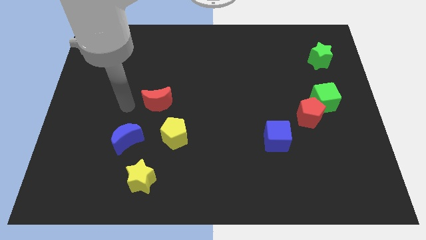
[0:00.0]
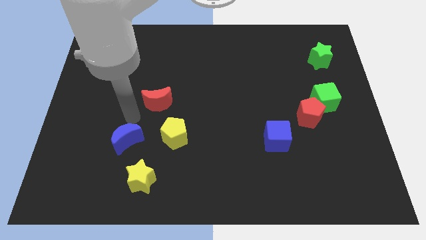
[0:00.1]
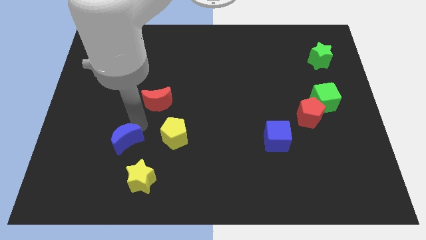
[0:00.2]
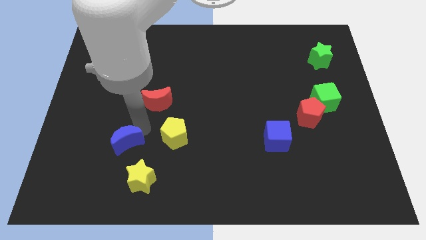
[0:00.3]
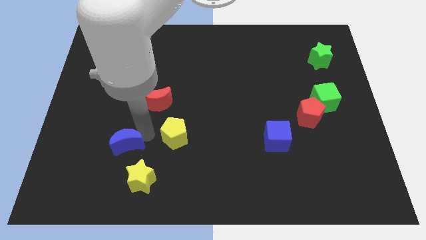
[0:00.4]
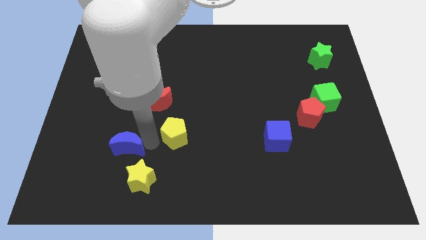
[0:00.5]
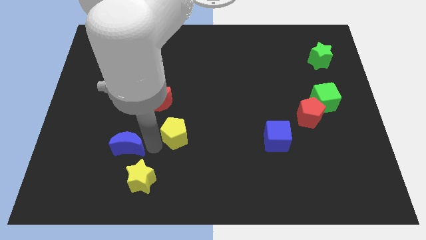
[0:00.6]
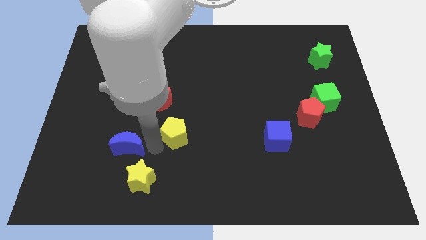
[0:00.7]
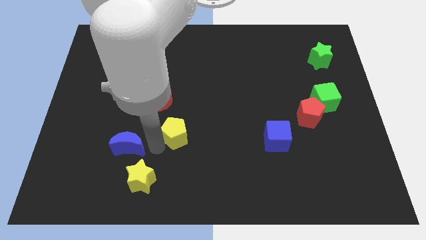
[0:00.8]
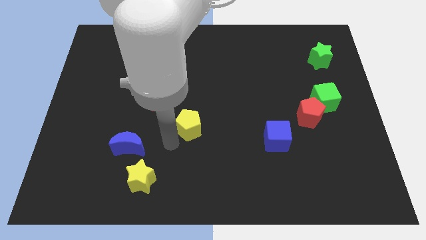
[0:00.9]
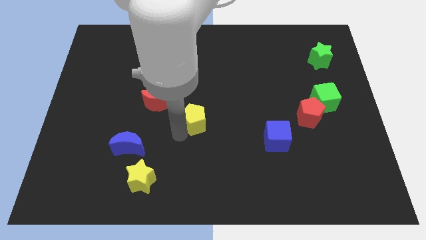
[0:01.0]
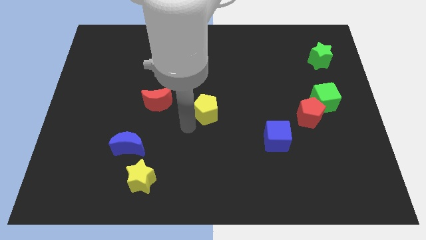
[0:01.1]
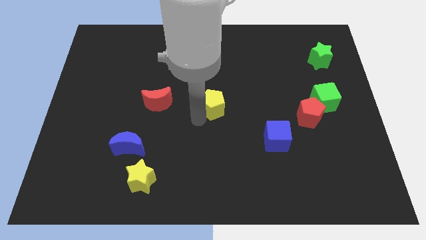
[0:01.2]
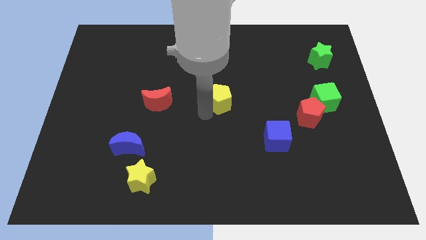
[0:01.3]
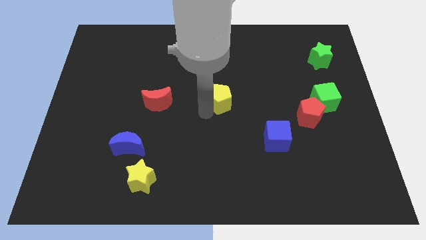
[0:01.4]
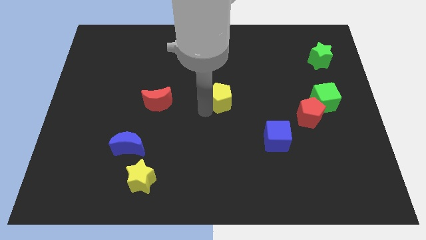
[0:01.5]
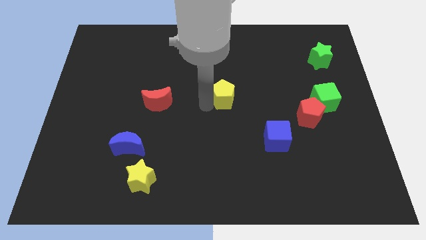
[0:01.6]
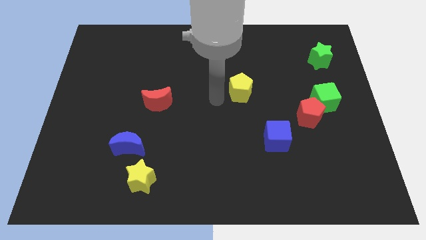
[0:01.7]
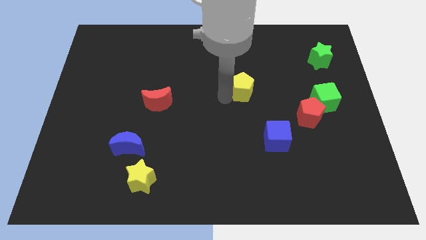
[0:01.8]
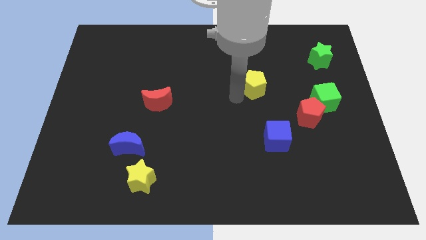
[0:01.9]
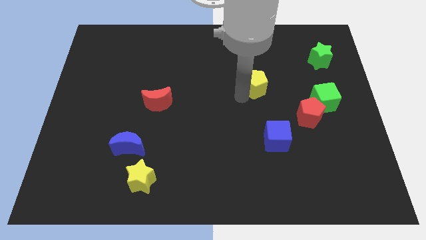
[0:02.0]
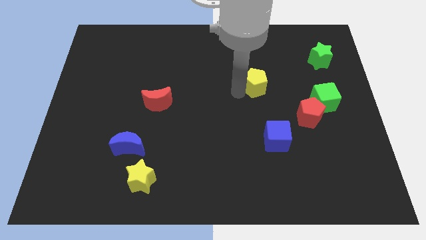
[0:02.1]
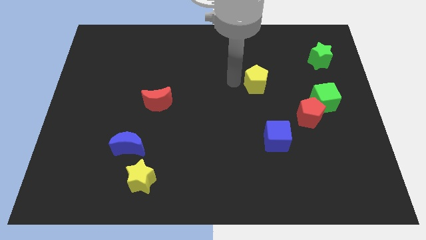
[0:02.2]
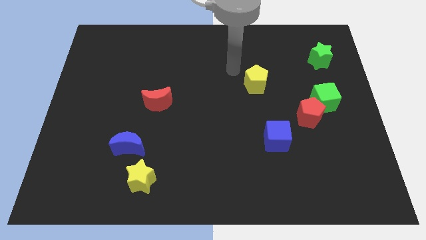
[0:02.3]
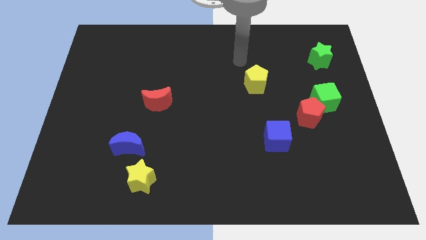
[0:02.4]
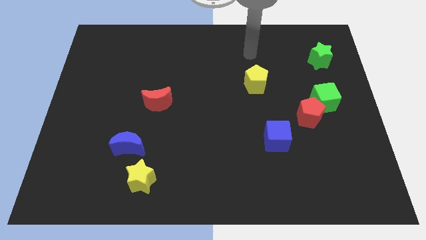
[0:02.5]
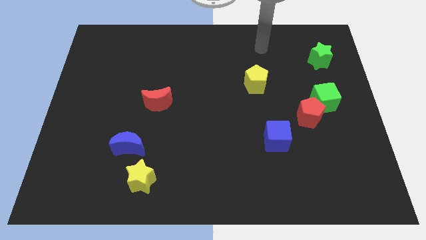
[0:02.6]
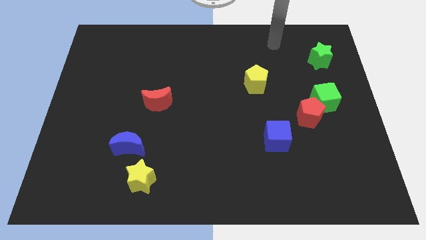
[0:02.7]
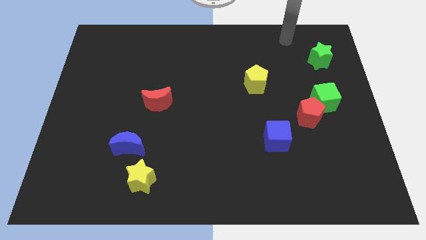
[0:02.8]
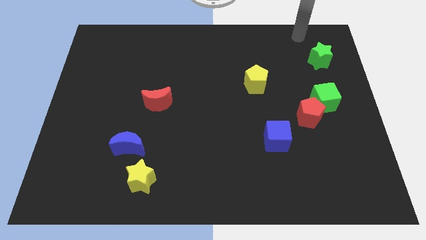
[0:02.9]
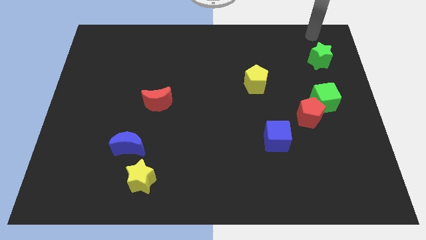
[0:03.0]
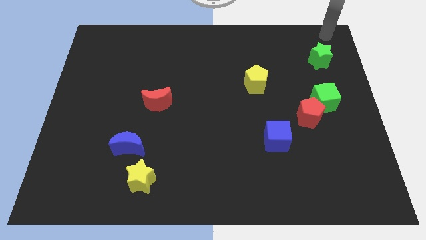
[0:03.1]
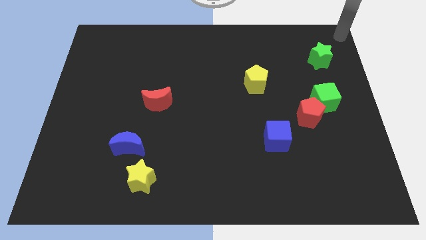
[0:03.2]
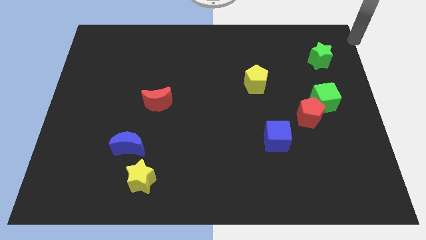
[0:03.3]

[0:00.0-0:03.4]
move the yellow pentagon vertically to the top of the blue cube

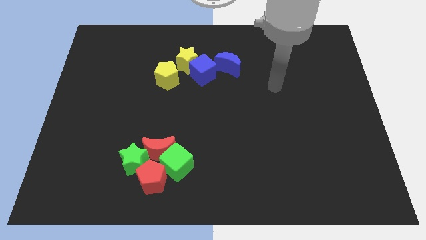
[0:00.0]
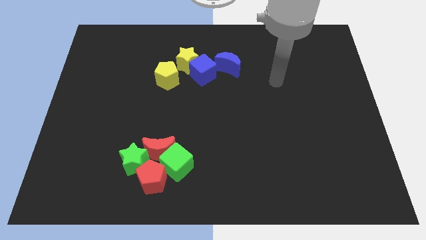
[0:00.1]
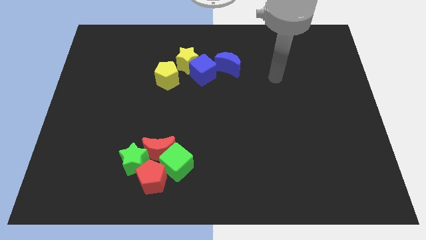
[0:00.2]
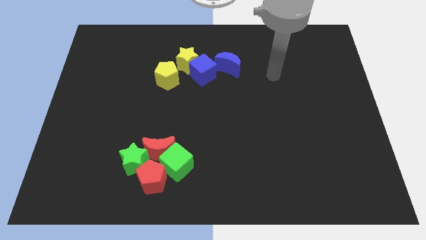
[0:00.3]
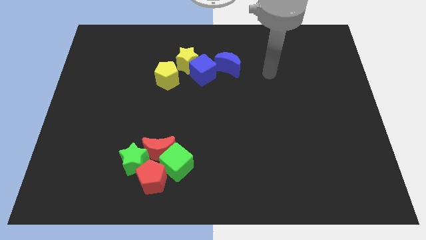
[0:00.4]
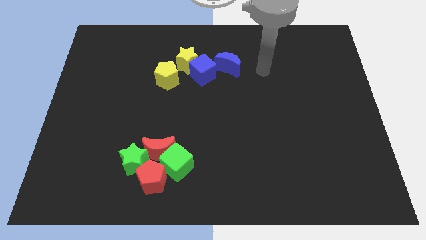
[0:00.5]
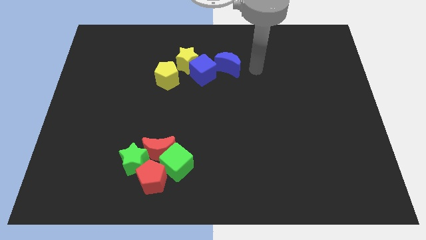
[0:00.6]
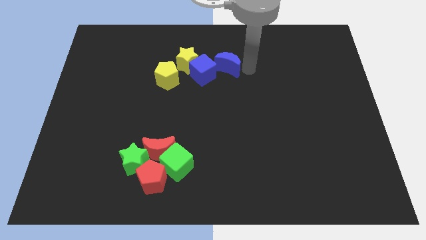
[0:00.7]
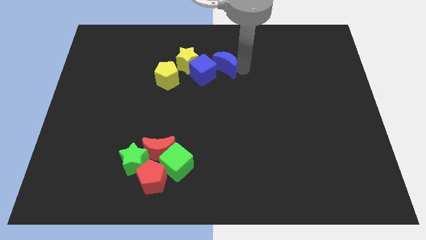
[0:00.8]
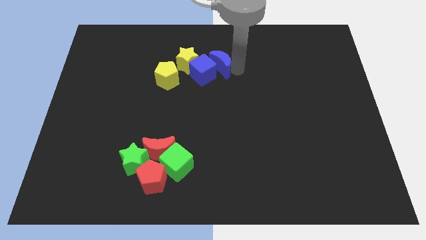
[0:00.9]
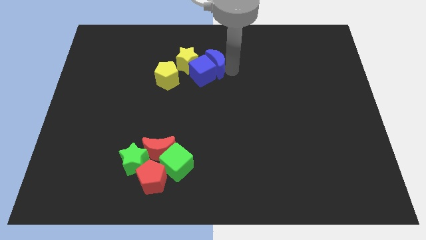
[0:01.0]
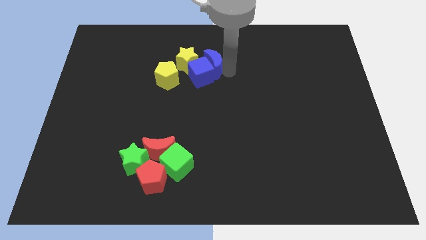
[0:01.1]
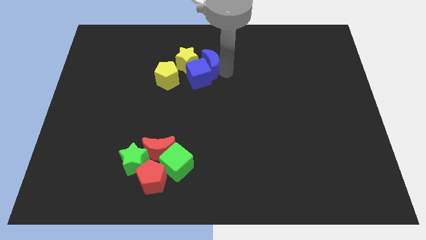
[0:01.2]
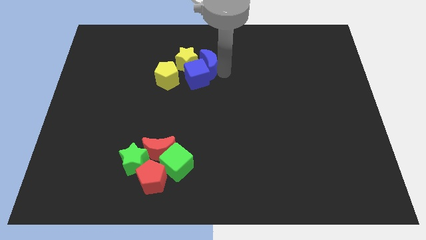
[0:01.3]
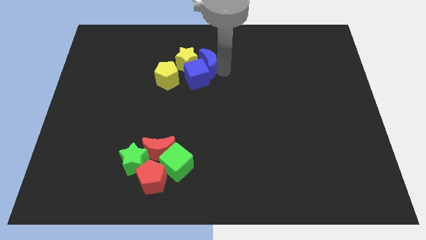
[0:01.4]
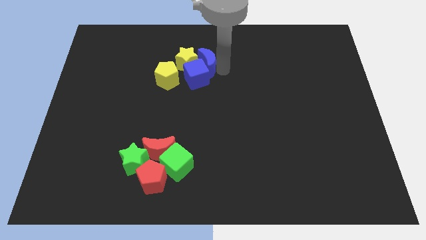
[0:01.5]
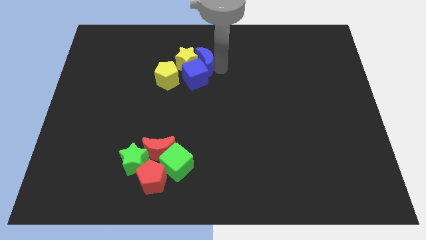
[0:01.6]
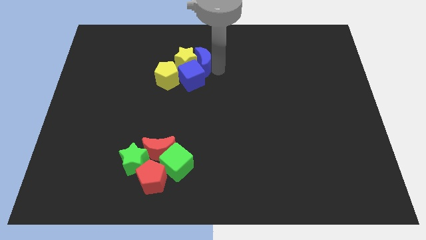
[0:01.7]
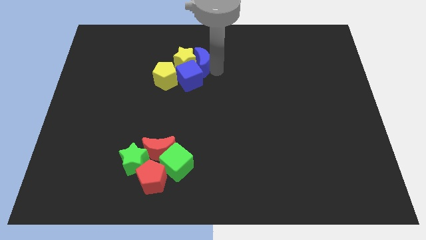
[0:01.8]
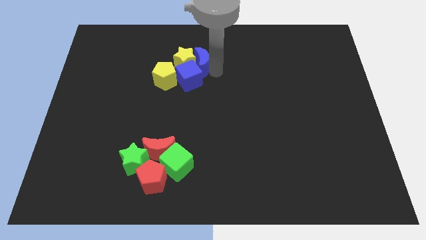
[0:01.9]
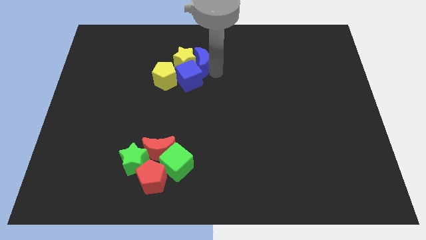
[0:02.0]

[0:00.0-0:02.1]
drag the blue crescent into group of blocks

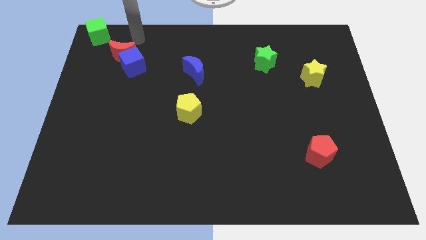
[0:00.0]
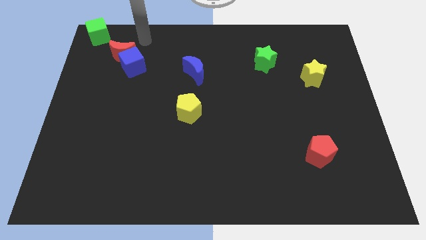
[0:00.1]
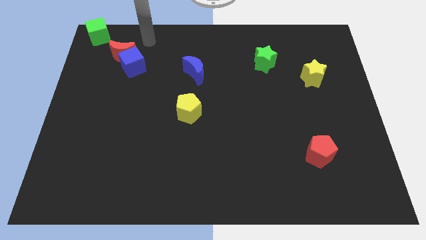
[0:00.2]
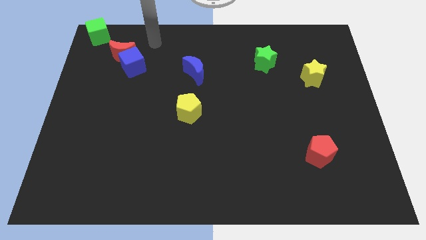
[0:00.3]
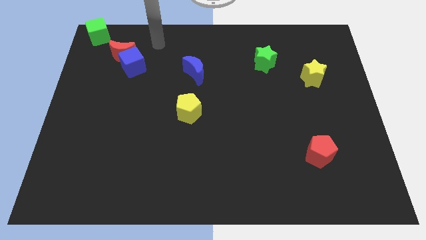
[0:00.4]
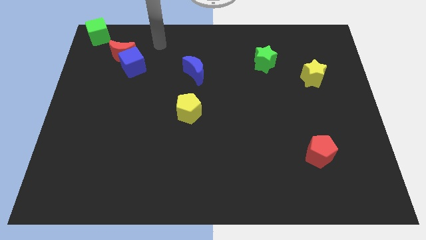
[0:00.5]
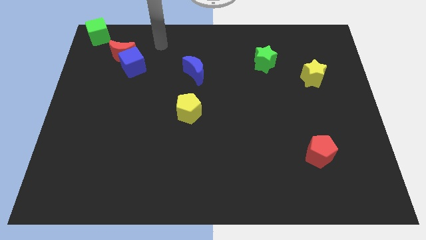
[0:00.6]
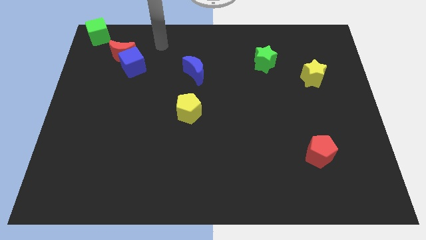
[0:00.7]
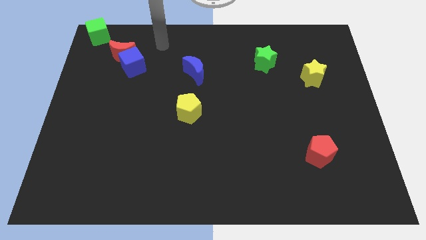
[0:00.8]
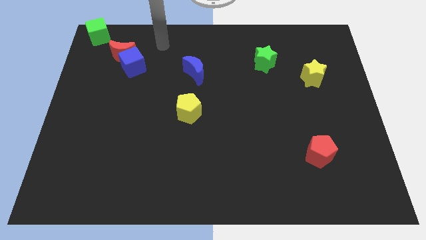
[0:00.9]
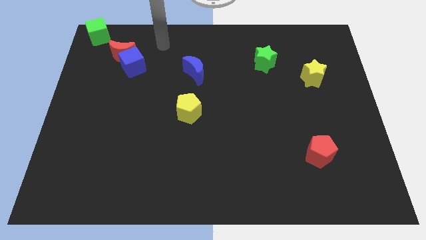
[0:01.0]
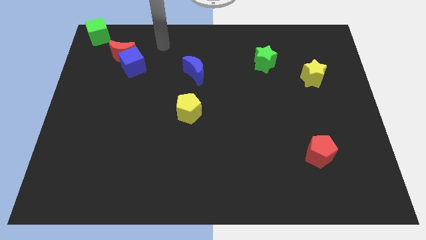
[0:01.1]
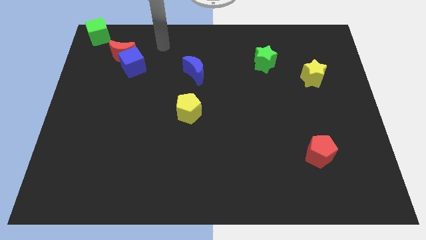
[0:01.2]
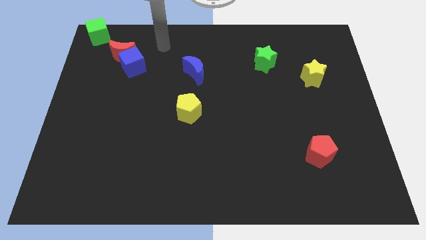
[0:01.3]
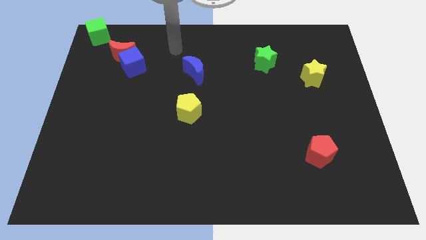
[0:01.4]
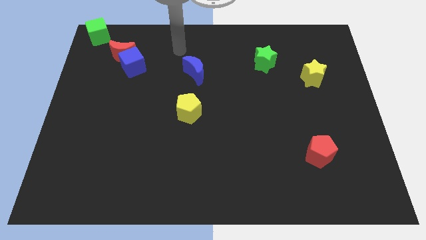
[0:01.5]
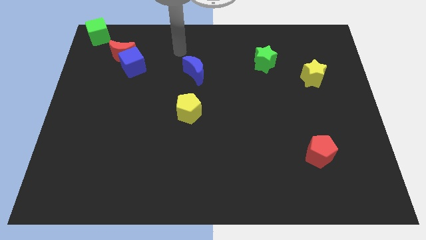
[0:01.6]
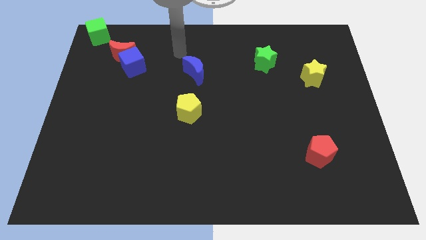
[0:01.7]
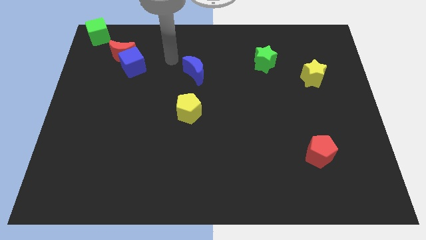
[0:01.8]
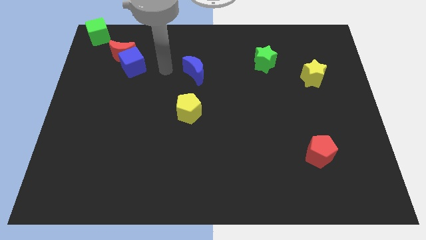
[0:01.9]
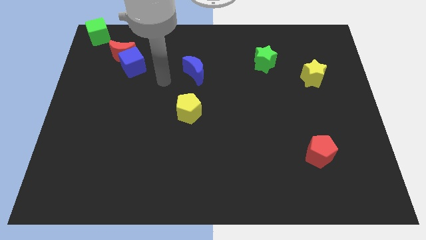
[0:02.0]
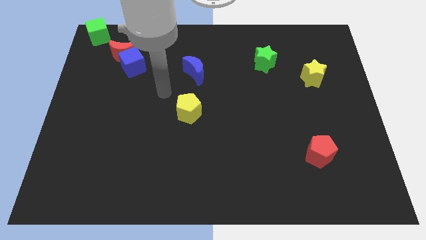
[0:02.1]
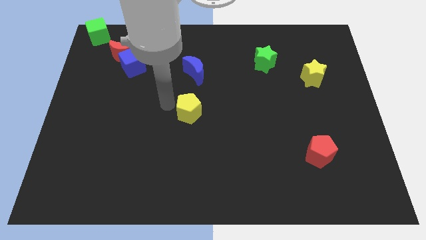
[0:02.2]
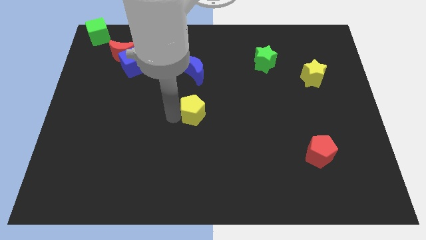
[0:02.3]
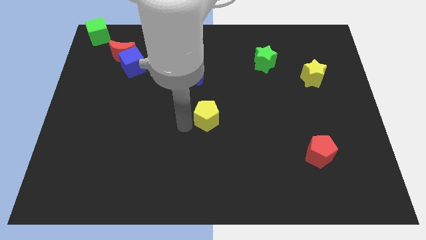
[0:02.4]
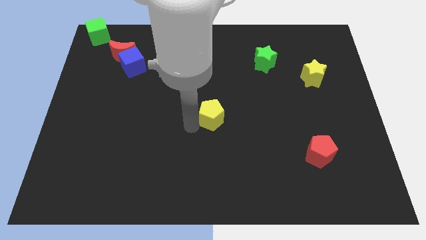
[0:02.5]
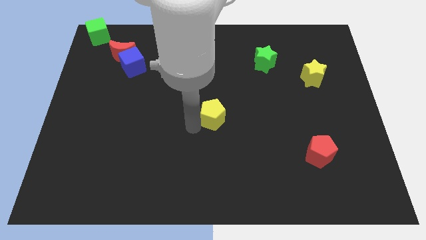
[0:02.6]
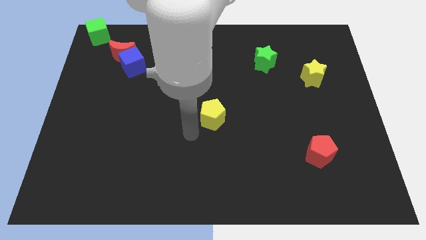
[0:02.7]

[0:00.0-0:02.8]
slightly push the yellow pentagon center of the board

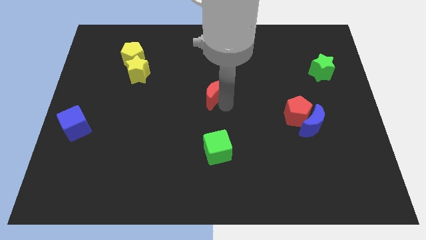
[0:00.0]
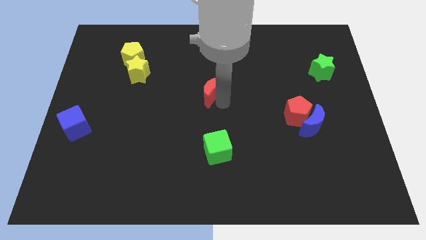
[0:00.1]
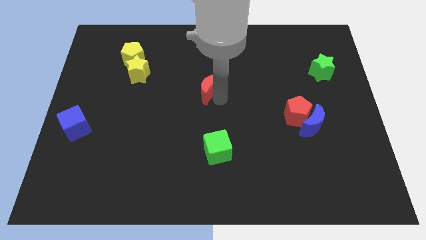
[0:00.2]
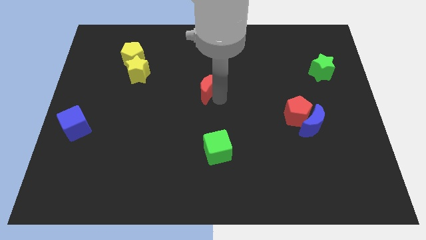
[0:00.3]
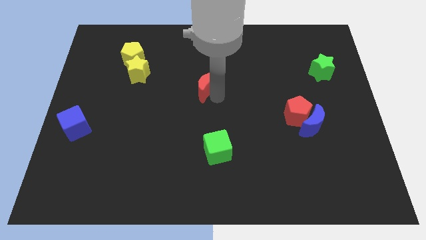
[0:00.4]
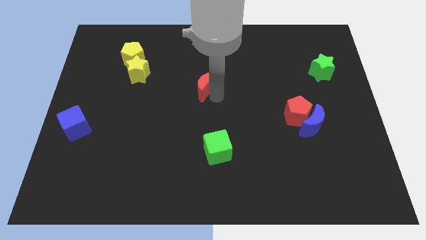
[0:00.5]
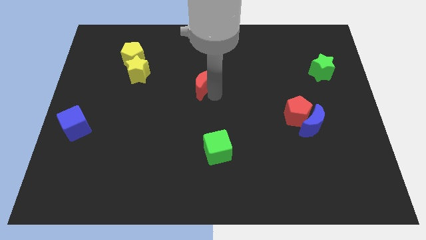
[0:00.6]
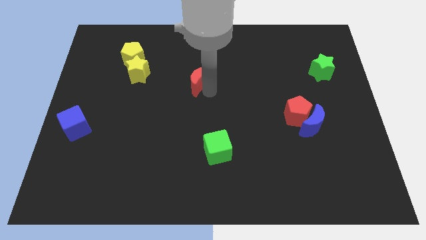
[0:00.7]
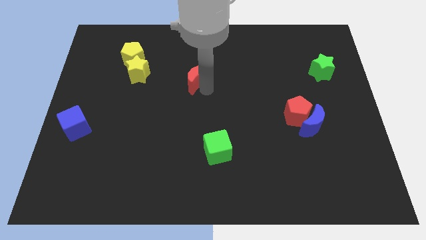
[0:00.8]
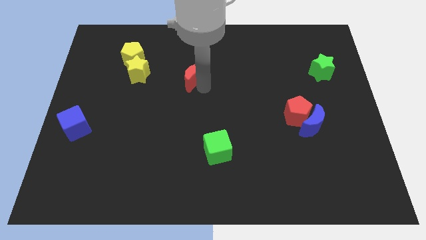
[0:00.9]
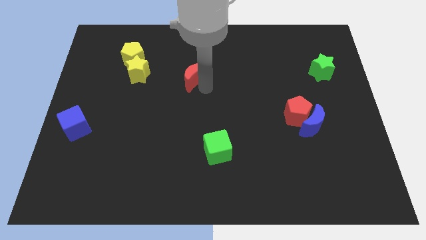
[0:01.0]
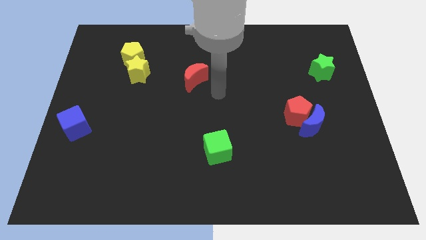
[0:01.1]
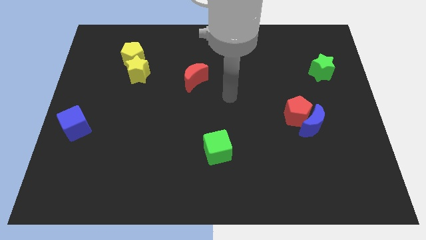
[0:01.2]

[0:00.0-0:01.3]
move the red moon towards the yellow star
